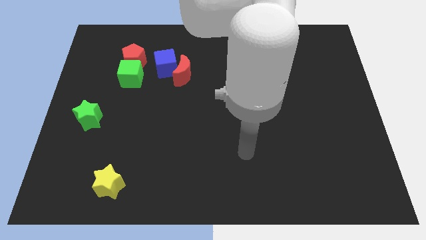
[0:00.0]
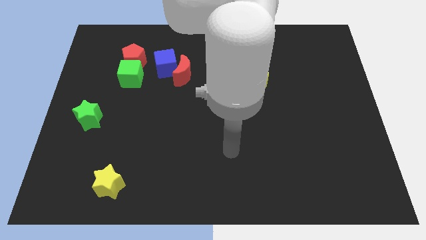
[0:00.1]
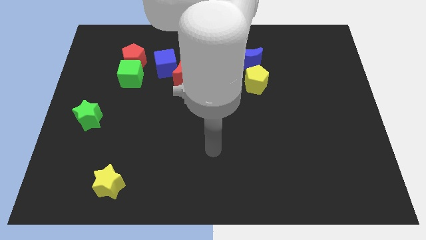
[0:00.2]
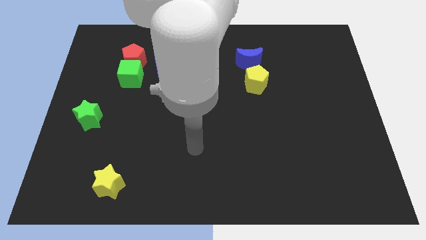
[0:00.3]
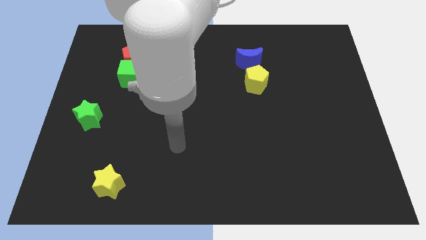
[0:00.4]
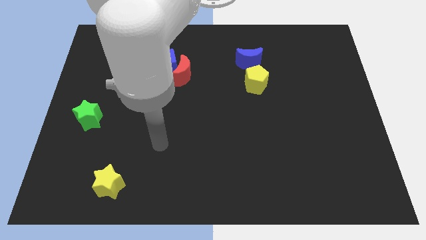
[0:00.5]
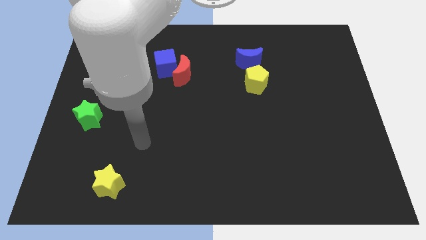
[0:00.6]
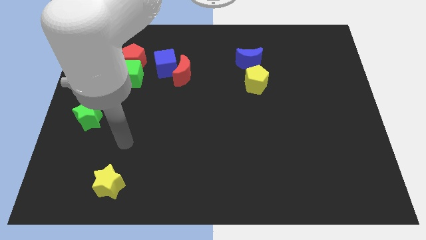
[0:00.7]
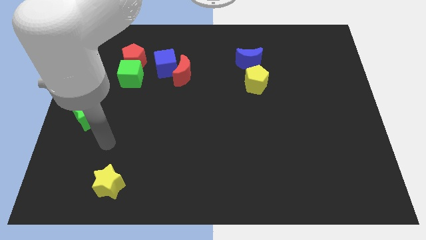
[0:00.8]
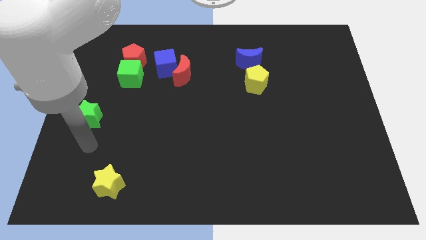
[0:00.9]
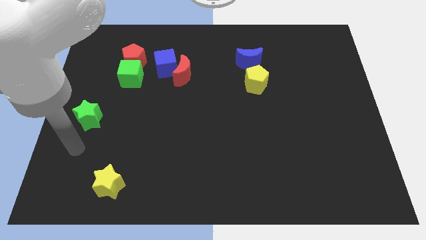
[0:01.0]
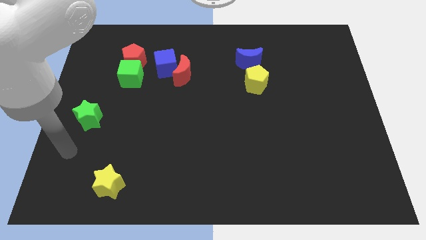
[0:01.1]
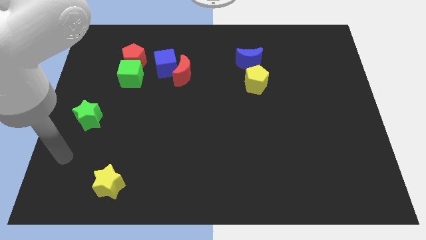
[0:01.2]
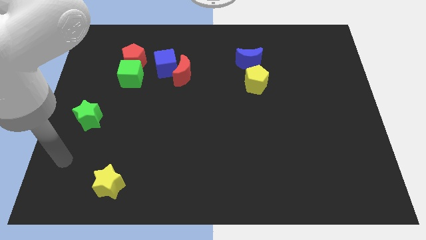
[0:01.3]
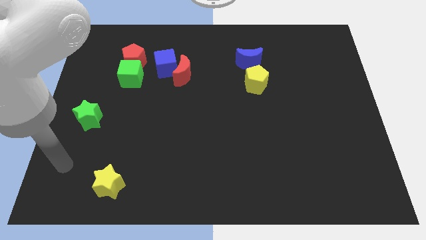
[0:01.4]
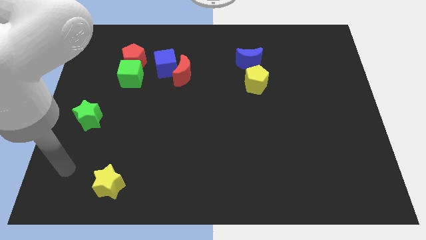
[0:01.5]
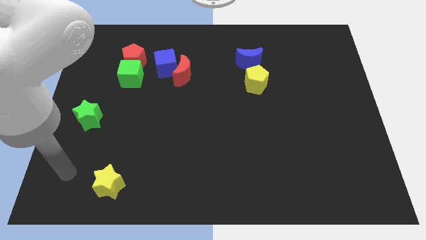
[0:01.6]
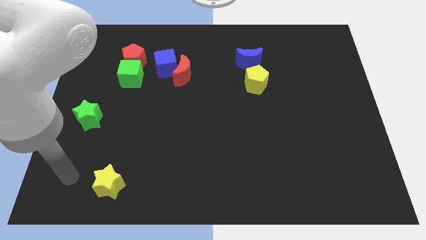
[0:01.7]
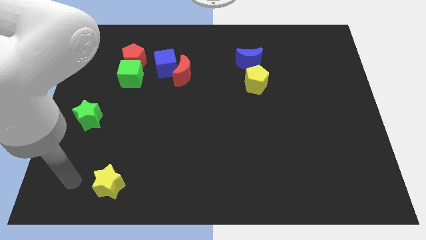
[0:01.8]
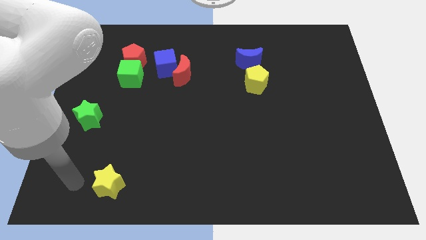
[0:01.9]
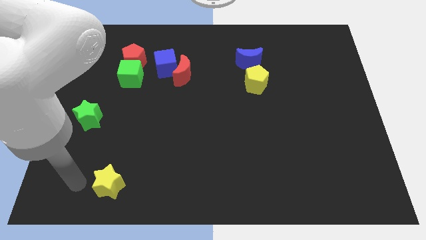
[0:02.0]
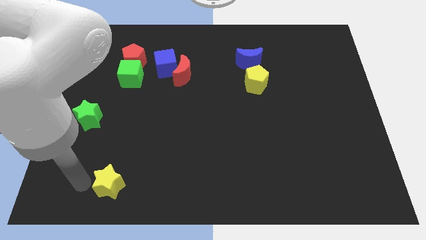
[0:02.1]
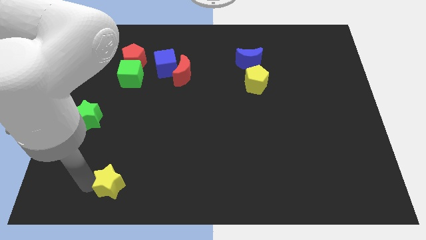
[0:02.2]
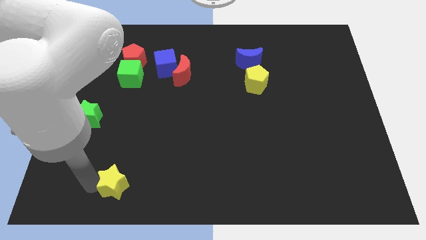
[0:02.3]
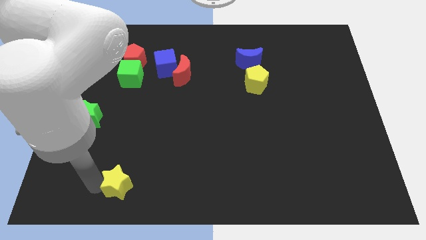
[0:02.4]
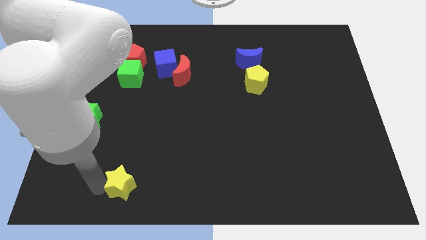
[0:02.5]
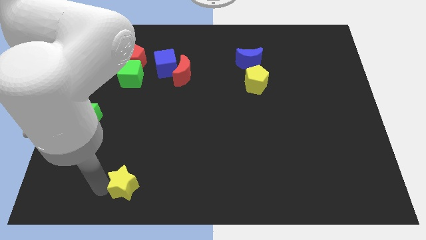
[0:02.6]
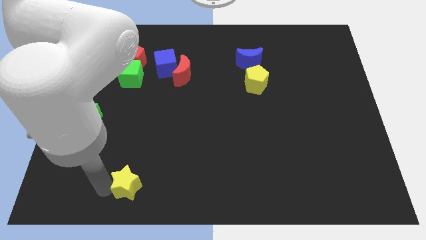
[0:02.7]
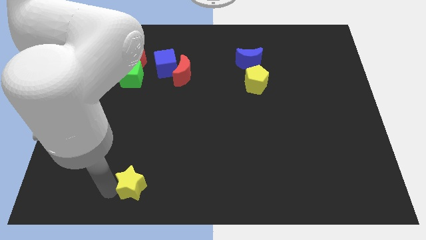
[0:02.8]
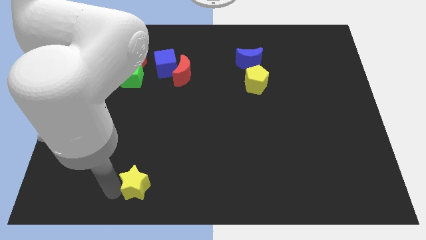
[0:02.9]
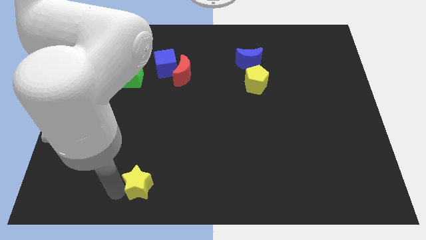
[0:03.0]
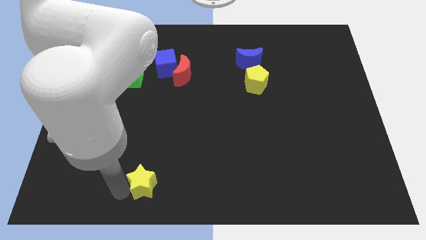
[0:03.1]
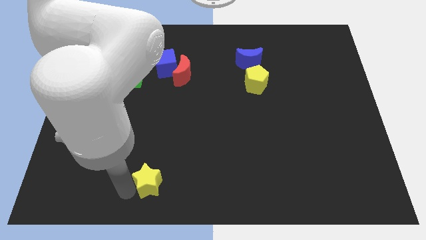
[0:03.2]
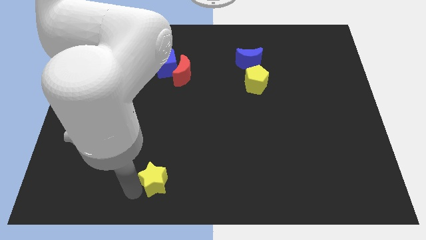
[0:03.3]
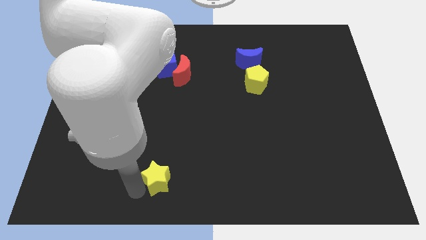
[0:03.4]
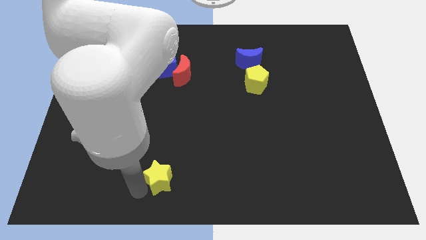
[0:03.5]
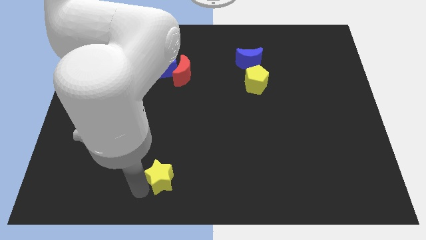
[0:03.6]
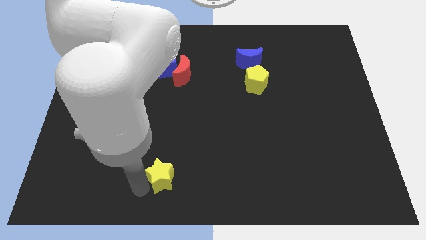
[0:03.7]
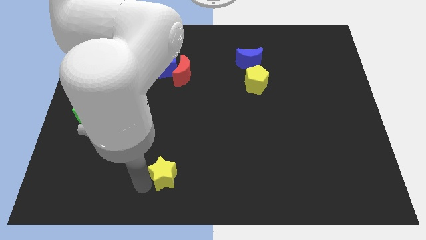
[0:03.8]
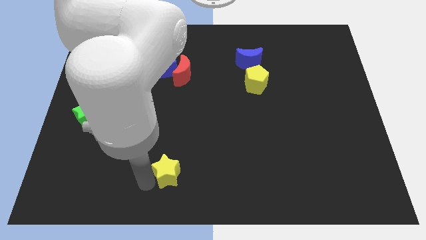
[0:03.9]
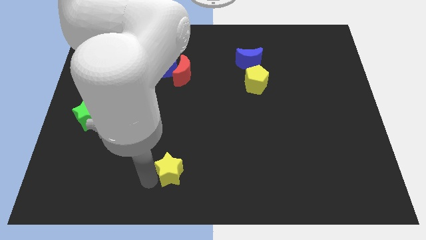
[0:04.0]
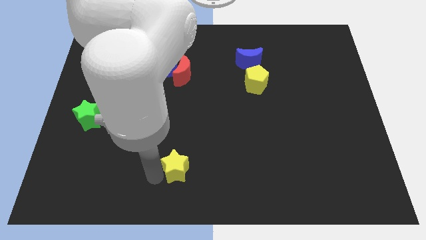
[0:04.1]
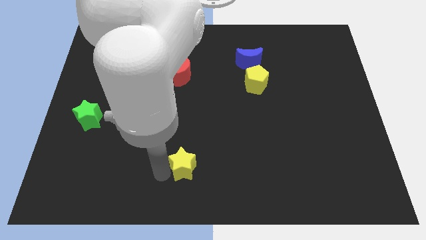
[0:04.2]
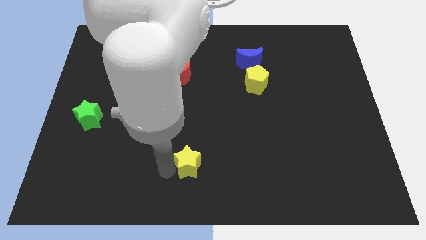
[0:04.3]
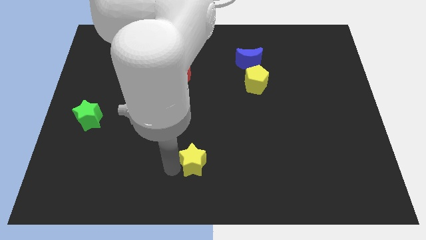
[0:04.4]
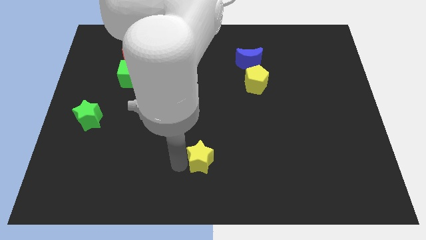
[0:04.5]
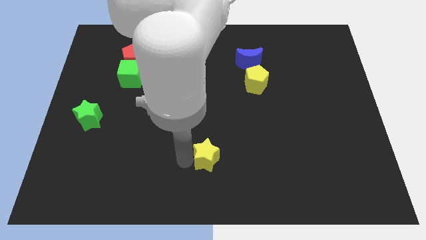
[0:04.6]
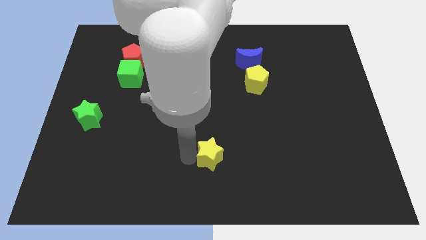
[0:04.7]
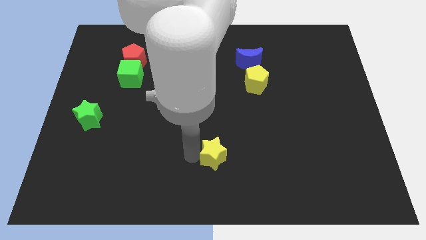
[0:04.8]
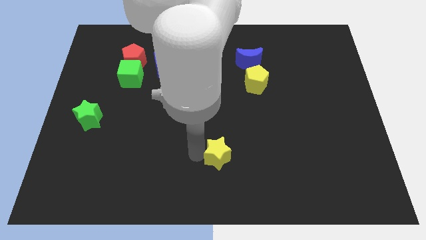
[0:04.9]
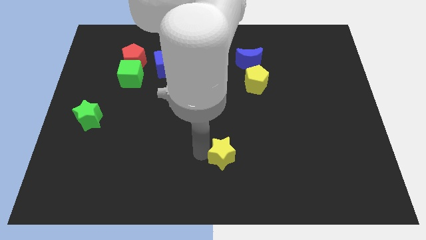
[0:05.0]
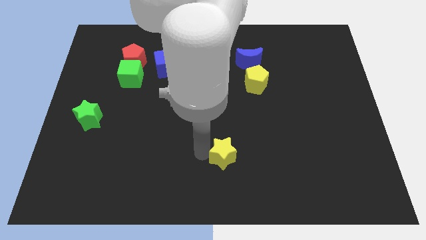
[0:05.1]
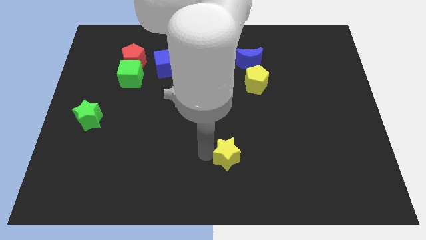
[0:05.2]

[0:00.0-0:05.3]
move the yellow star to the right of the board

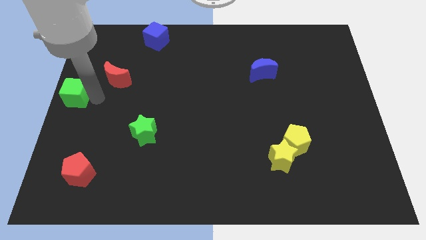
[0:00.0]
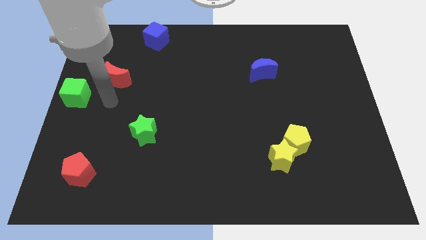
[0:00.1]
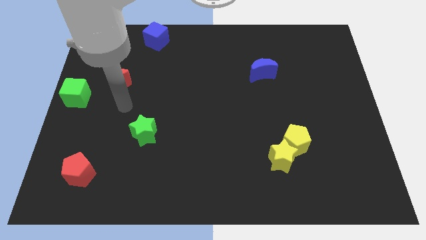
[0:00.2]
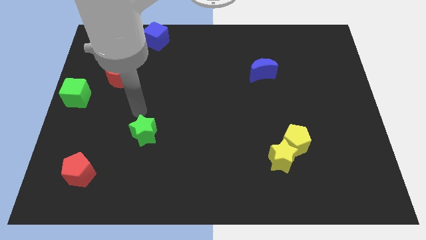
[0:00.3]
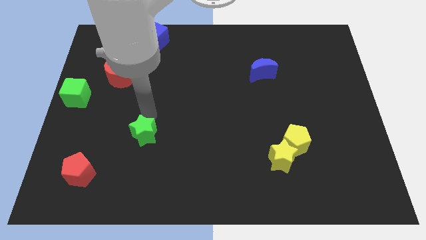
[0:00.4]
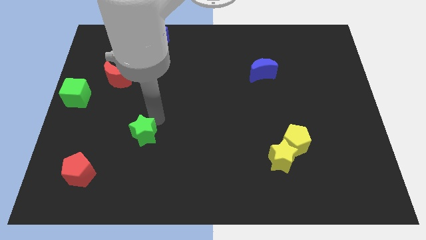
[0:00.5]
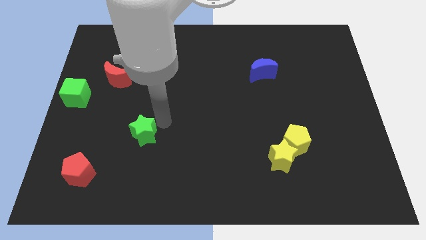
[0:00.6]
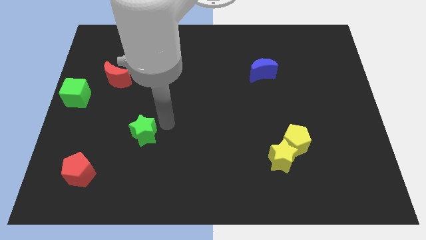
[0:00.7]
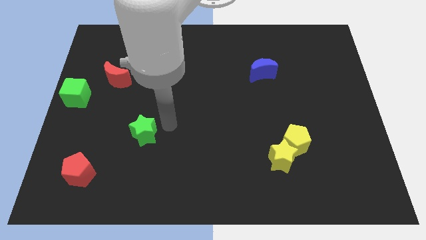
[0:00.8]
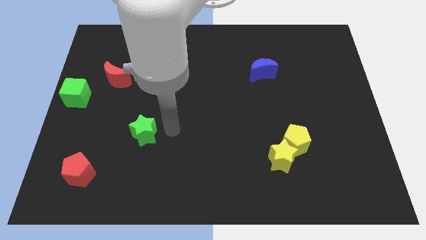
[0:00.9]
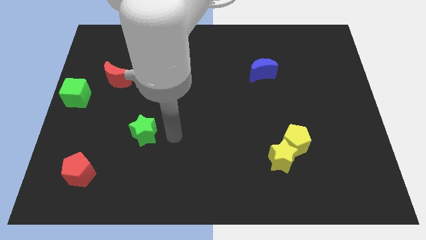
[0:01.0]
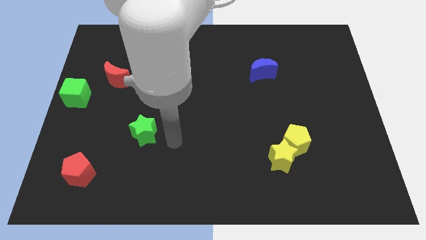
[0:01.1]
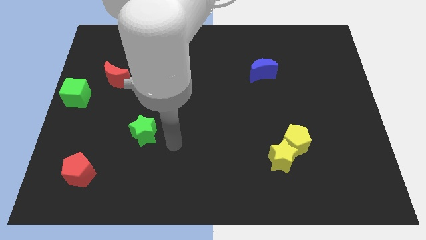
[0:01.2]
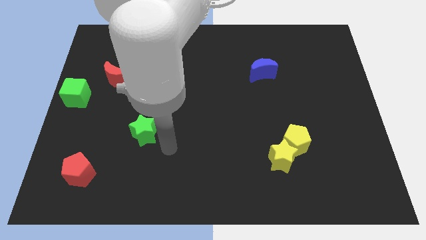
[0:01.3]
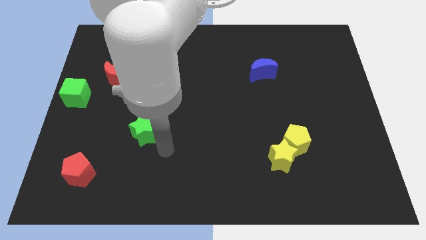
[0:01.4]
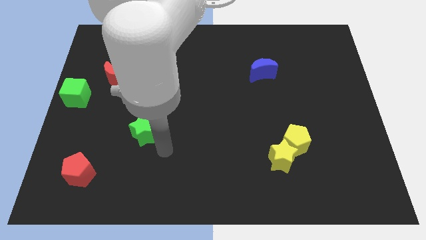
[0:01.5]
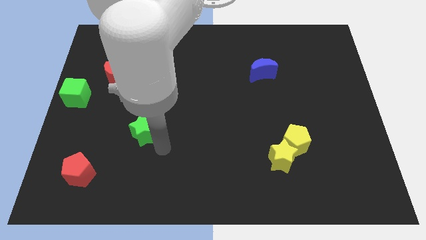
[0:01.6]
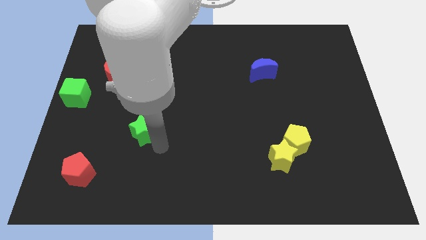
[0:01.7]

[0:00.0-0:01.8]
place your arm to the bottom of green star

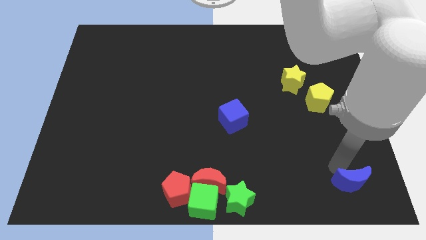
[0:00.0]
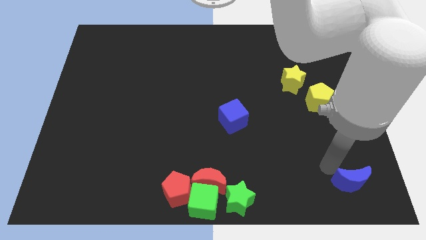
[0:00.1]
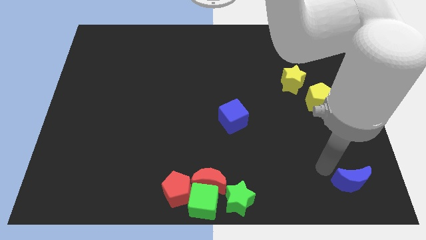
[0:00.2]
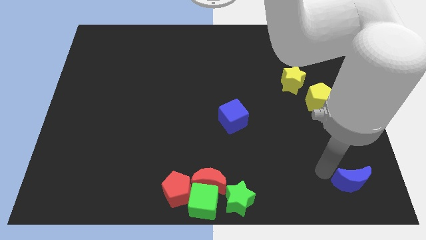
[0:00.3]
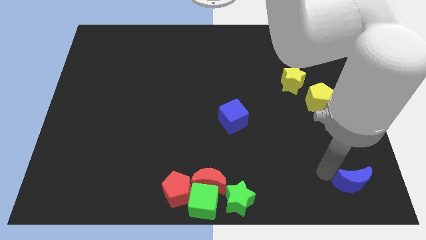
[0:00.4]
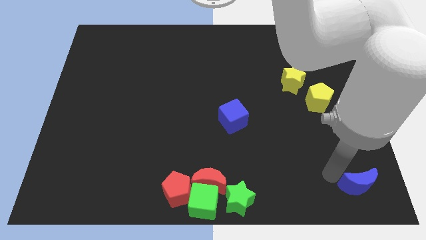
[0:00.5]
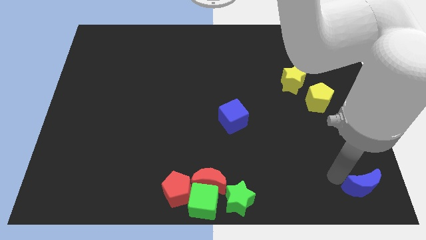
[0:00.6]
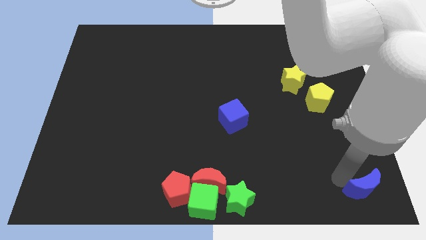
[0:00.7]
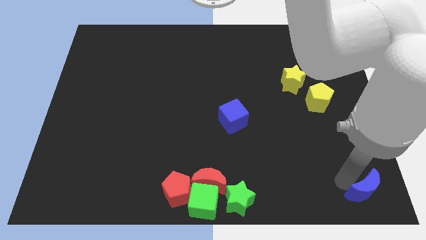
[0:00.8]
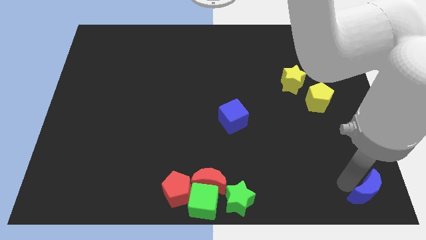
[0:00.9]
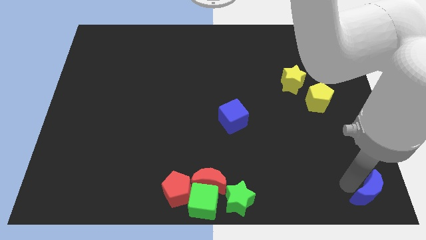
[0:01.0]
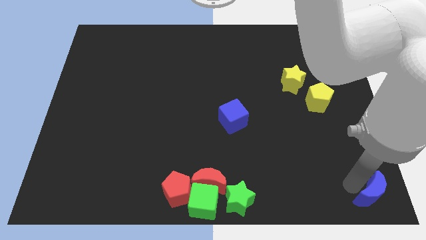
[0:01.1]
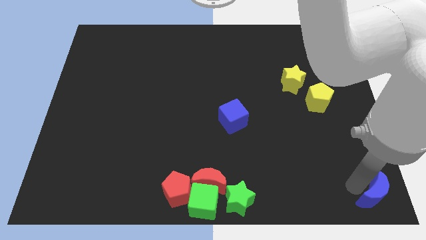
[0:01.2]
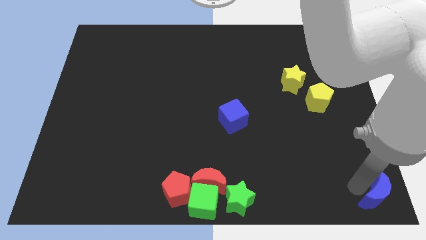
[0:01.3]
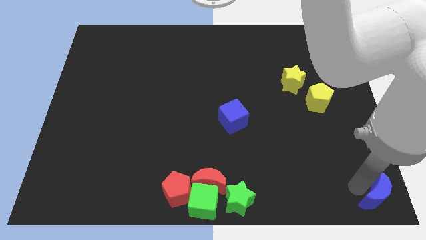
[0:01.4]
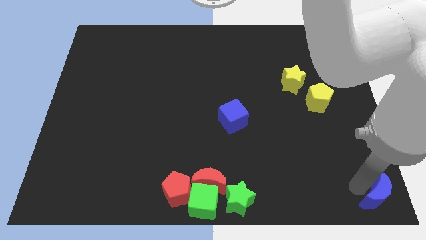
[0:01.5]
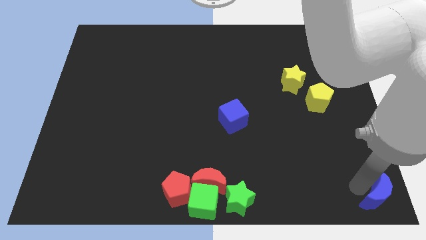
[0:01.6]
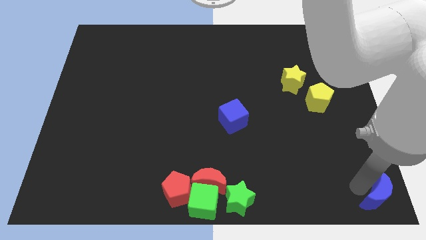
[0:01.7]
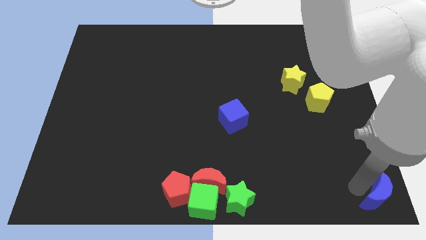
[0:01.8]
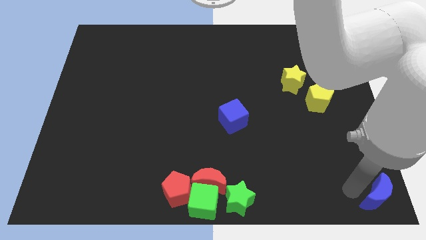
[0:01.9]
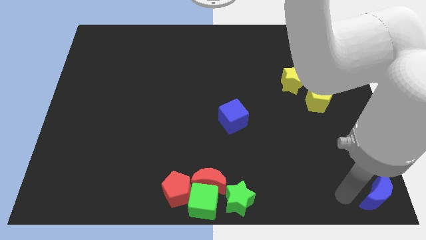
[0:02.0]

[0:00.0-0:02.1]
move the blue crescent to the bottom right corner
